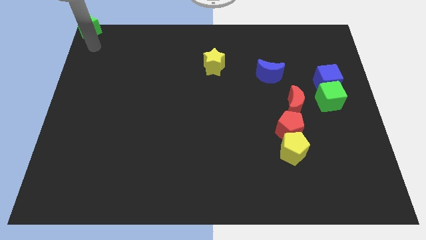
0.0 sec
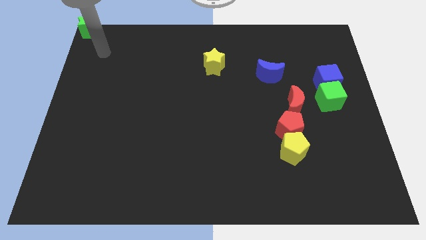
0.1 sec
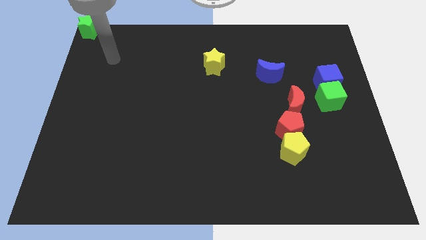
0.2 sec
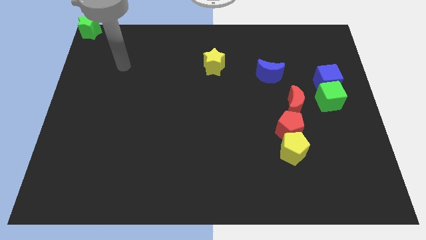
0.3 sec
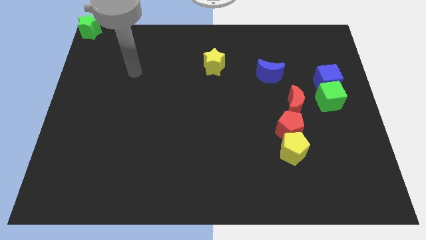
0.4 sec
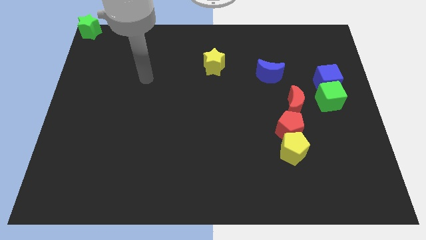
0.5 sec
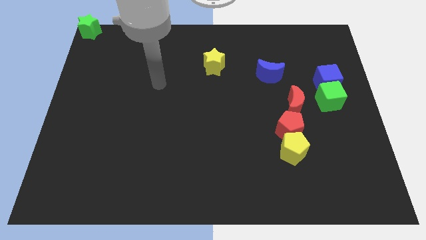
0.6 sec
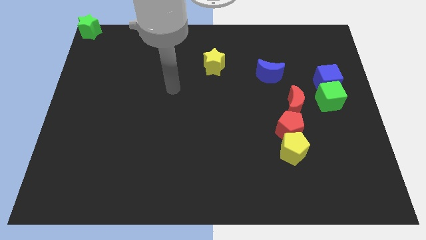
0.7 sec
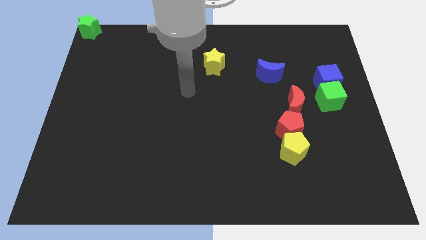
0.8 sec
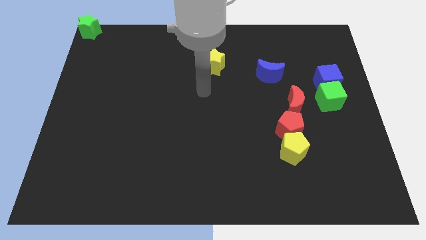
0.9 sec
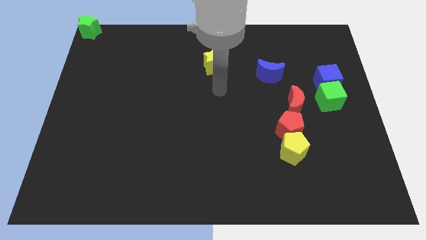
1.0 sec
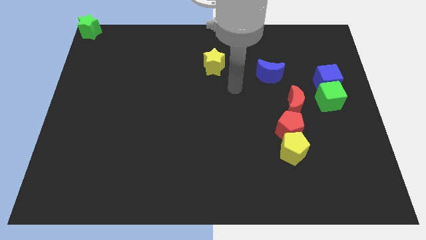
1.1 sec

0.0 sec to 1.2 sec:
place your arm at the bottom of the yellow star

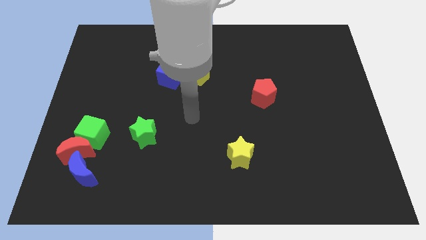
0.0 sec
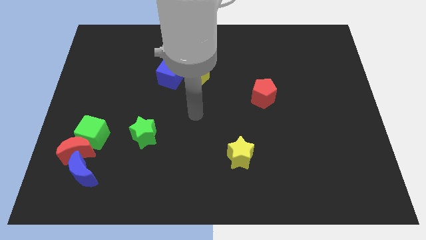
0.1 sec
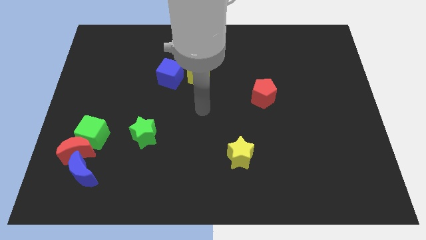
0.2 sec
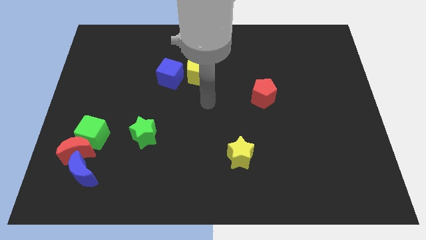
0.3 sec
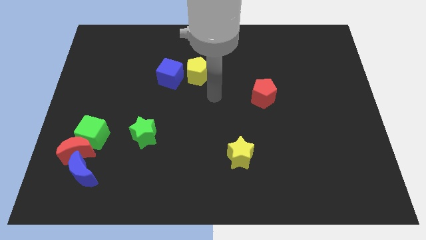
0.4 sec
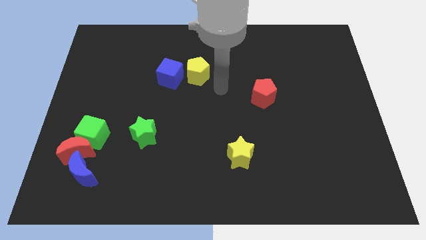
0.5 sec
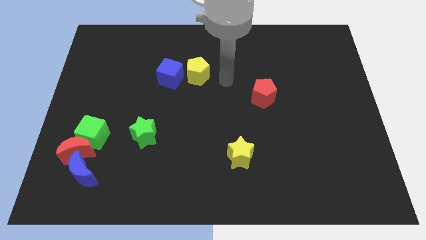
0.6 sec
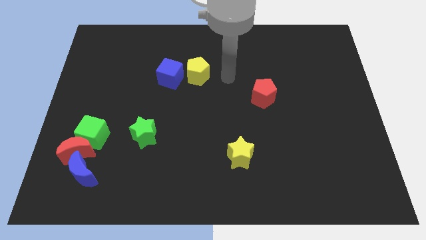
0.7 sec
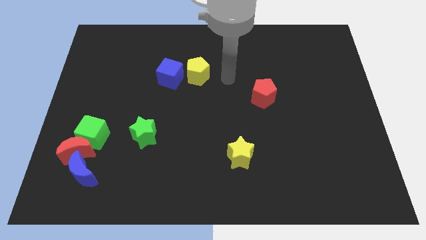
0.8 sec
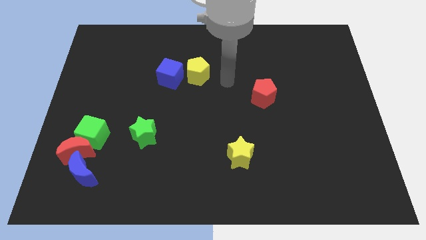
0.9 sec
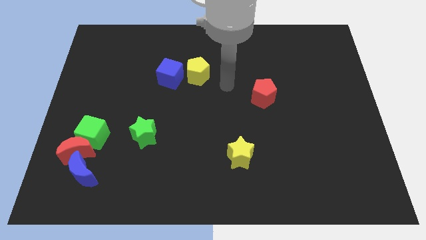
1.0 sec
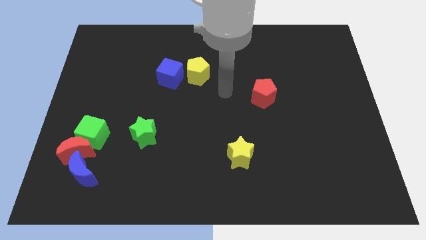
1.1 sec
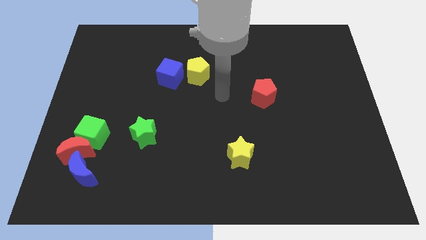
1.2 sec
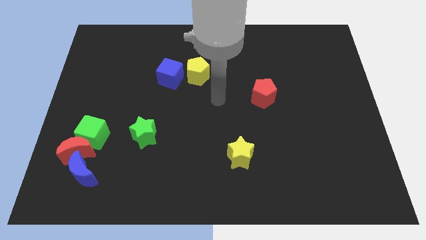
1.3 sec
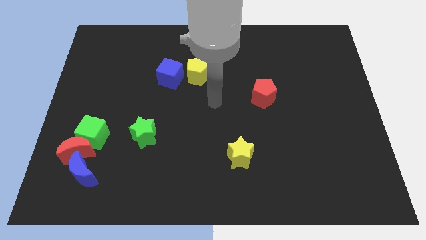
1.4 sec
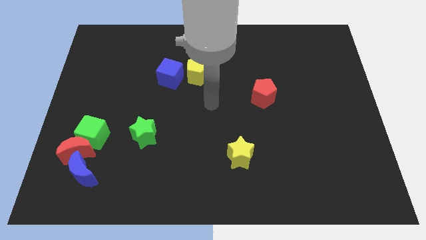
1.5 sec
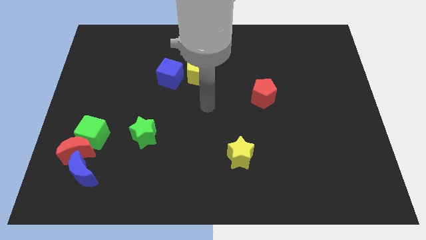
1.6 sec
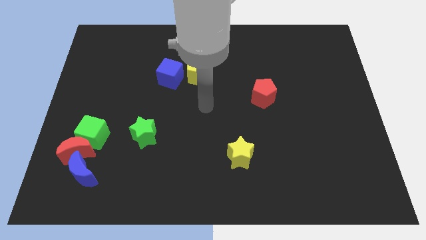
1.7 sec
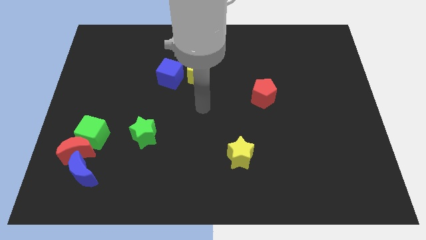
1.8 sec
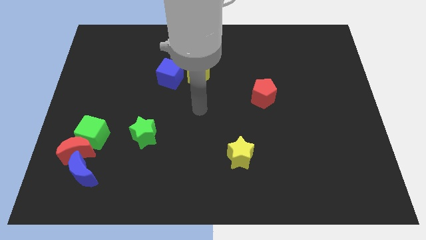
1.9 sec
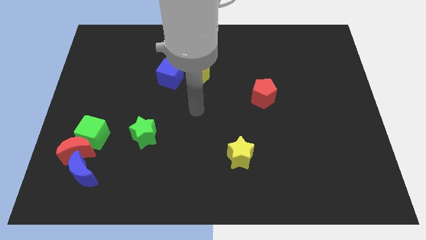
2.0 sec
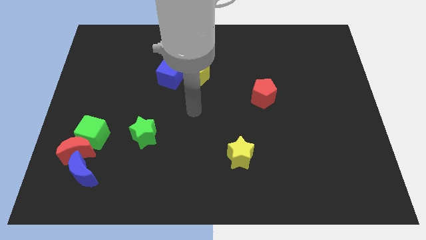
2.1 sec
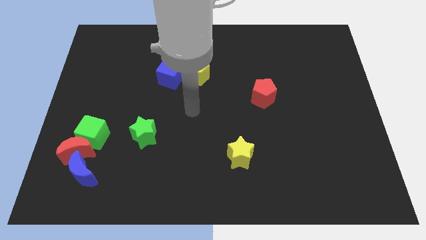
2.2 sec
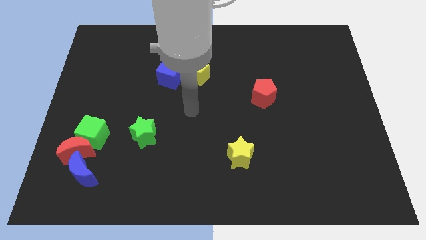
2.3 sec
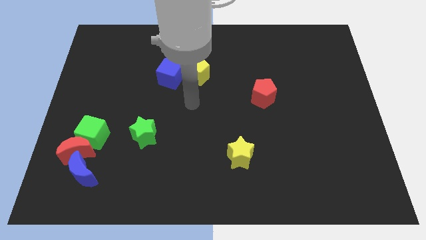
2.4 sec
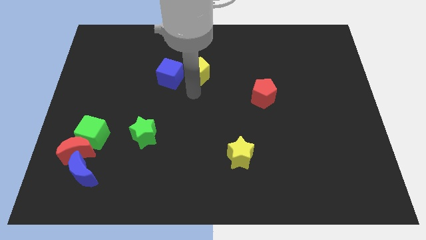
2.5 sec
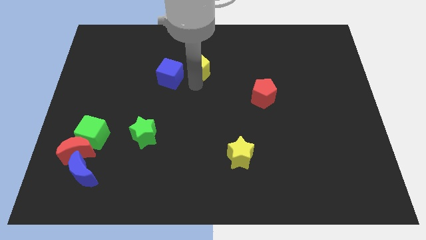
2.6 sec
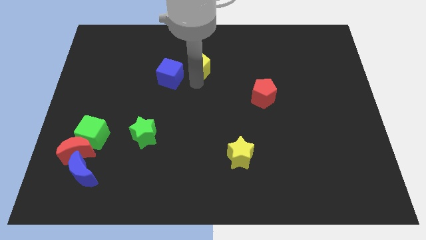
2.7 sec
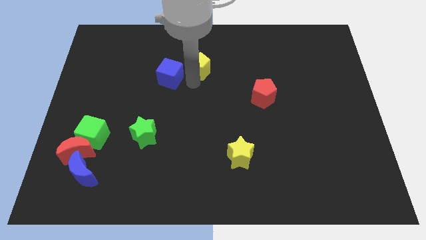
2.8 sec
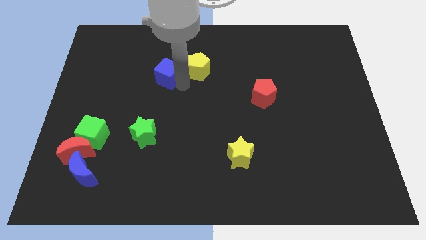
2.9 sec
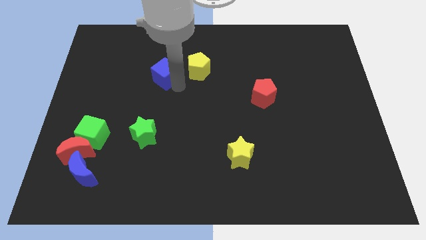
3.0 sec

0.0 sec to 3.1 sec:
push the blue cube slightly to the left

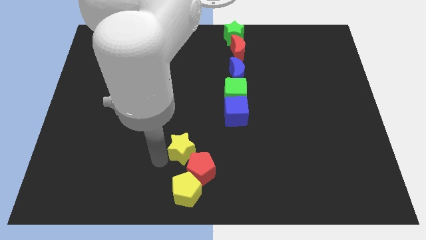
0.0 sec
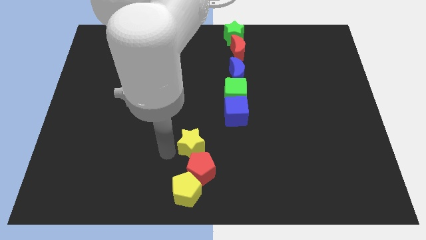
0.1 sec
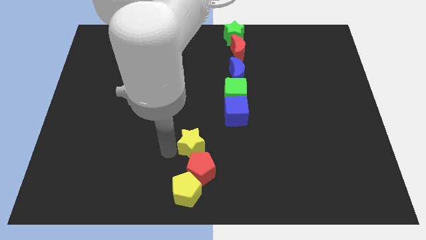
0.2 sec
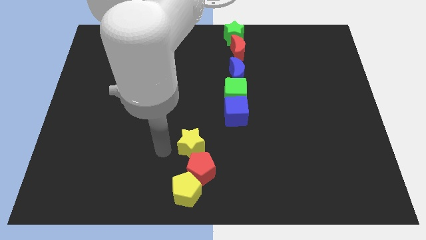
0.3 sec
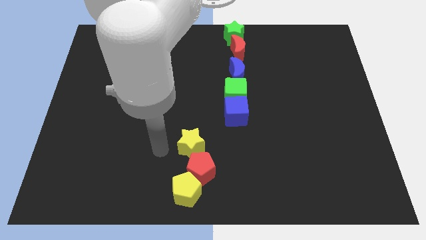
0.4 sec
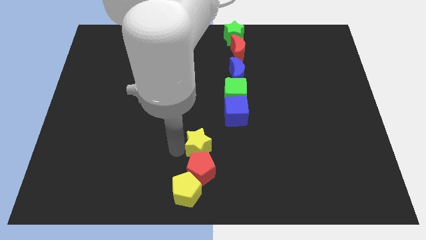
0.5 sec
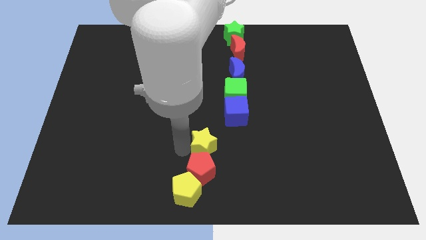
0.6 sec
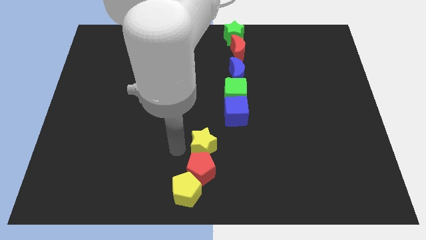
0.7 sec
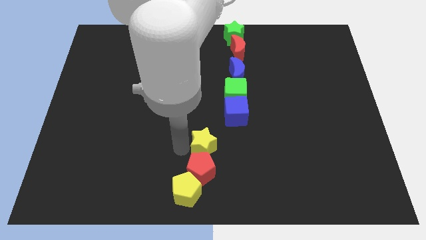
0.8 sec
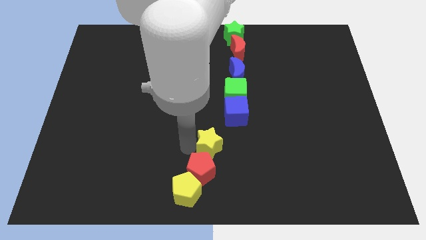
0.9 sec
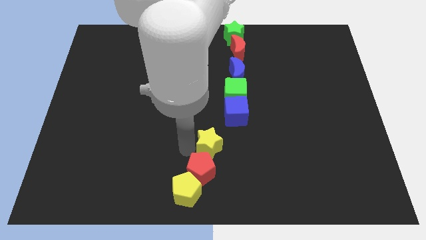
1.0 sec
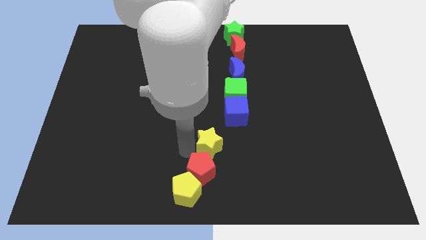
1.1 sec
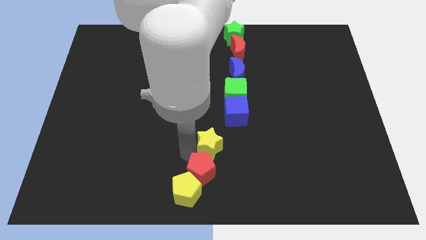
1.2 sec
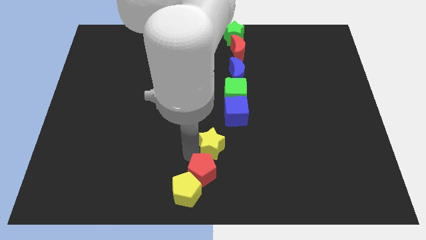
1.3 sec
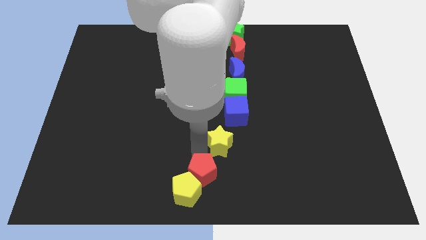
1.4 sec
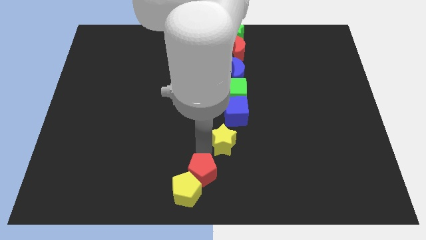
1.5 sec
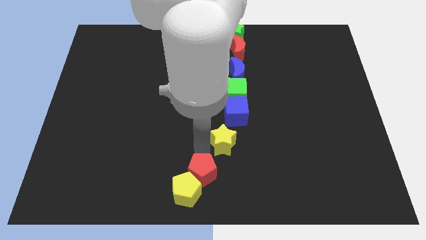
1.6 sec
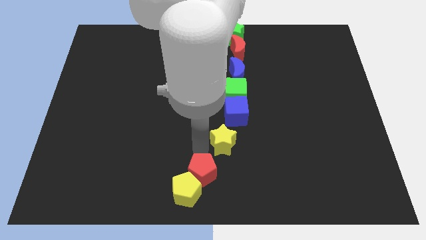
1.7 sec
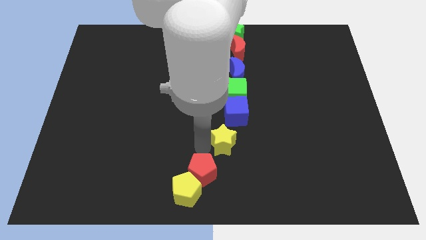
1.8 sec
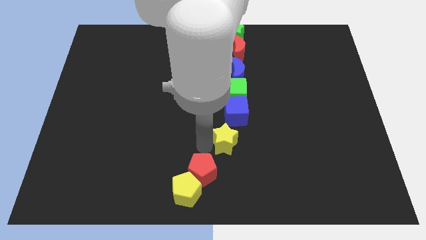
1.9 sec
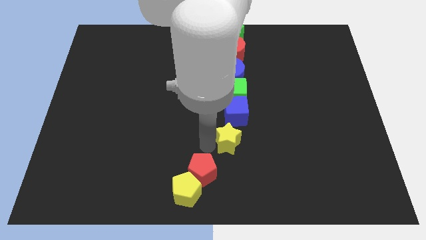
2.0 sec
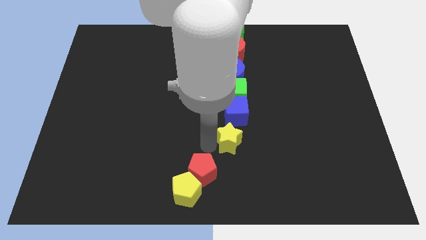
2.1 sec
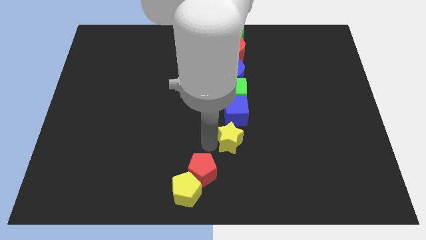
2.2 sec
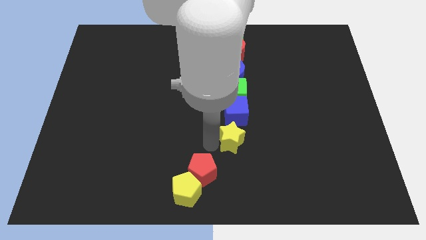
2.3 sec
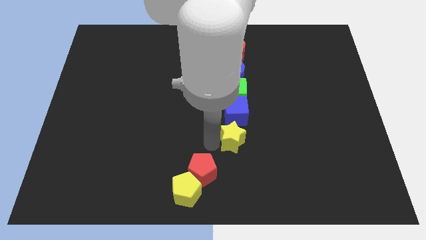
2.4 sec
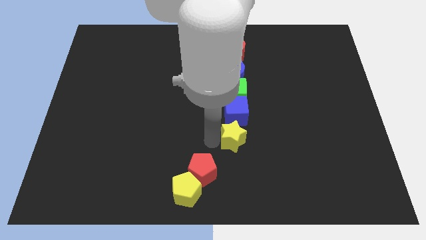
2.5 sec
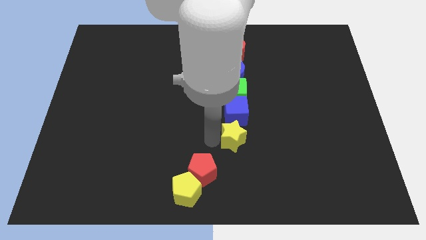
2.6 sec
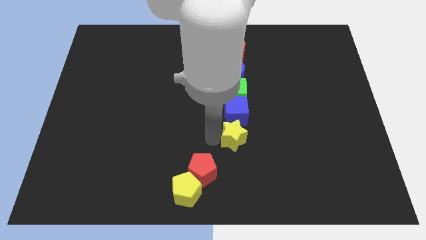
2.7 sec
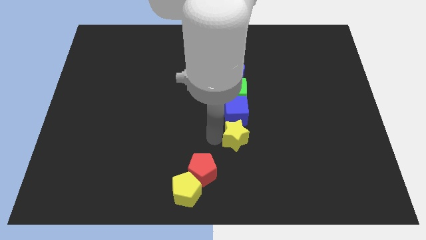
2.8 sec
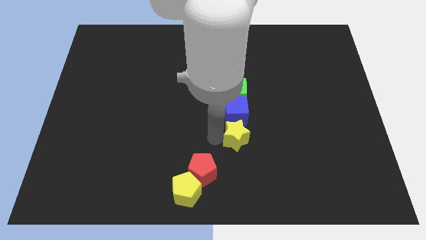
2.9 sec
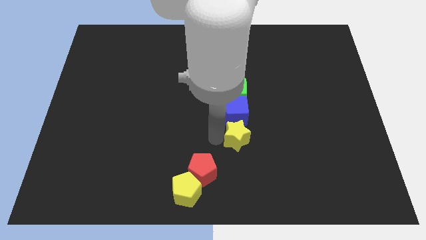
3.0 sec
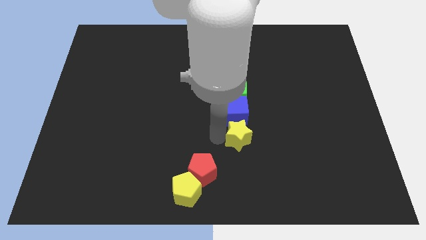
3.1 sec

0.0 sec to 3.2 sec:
move the yellow star to the bottom of the blue cube

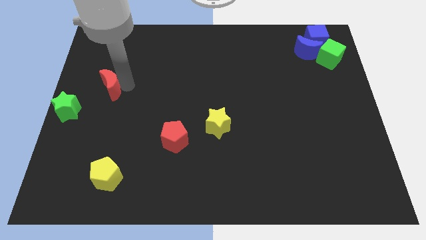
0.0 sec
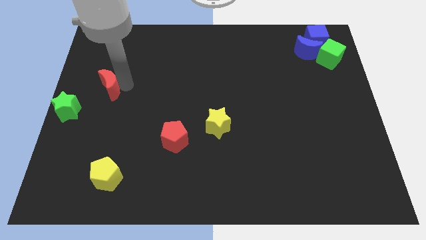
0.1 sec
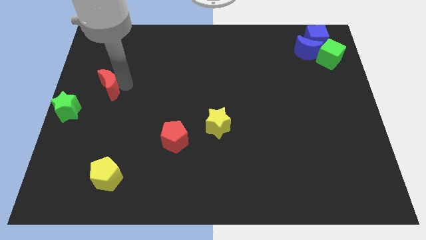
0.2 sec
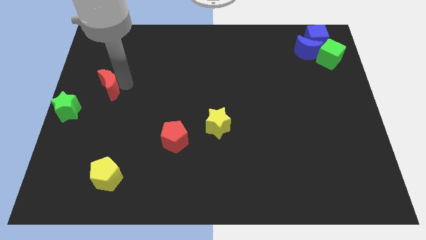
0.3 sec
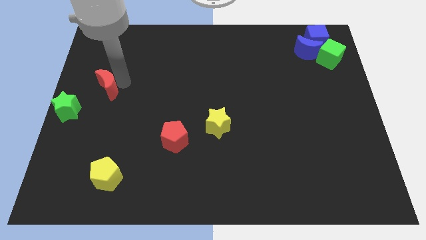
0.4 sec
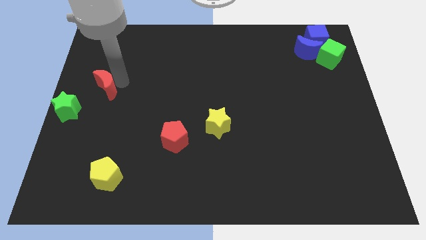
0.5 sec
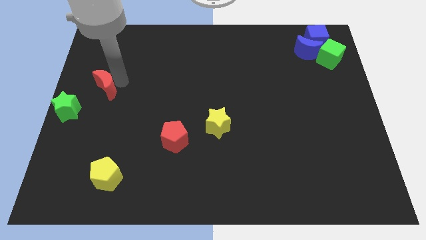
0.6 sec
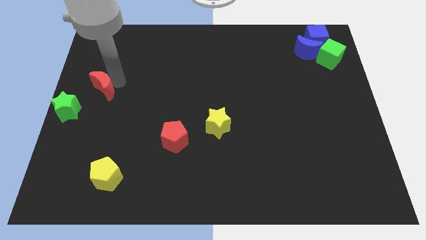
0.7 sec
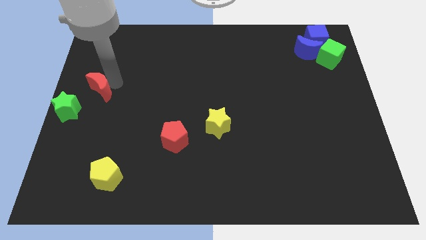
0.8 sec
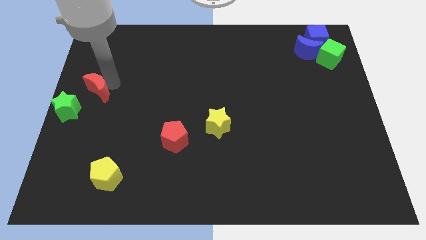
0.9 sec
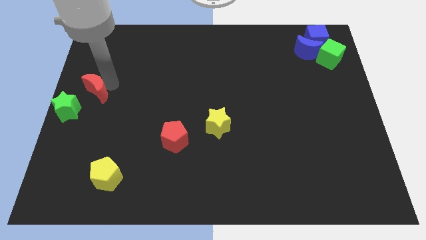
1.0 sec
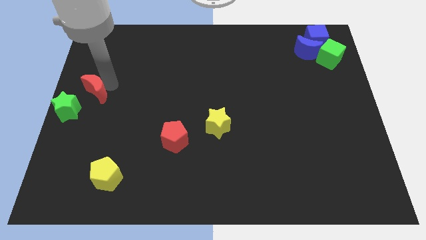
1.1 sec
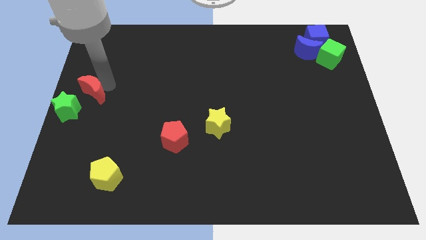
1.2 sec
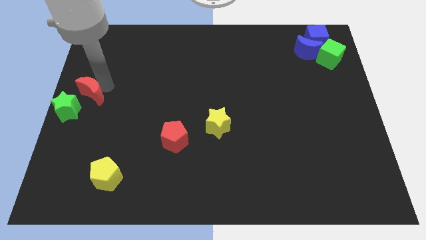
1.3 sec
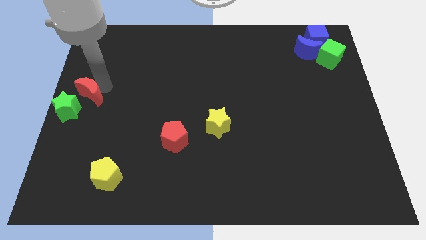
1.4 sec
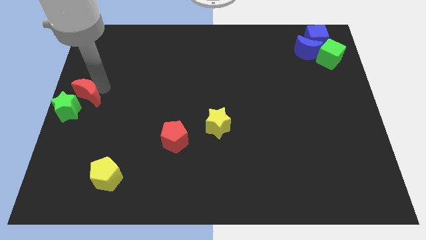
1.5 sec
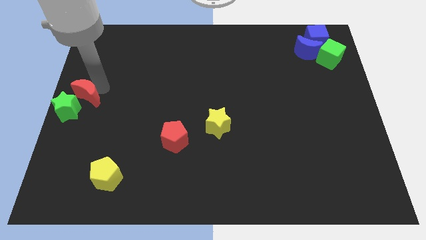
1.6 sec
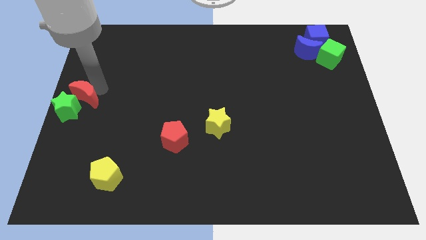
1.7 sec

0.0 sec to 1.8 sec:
push the red crescent towards the green star
